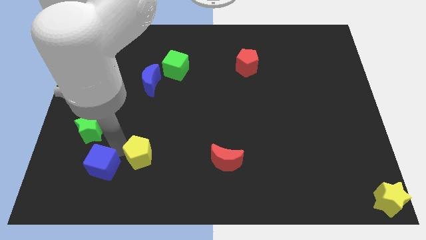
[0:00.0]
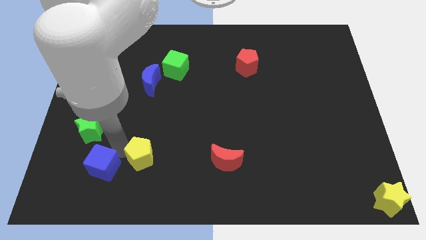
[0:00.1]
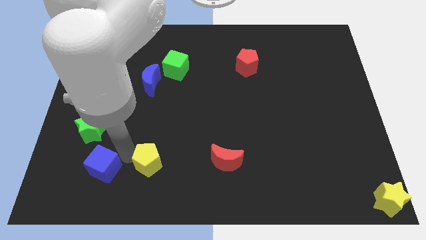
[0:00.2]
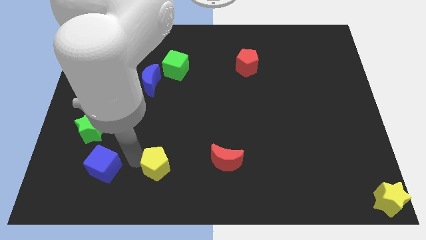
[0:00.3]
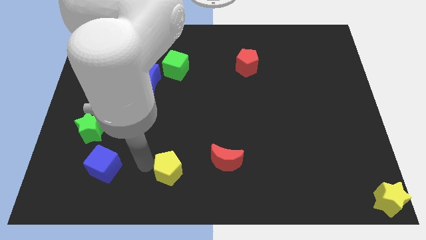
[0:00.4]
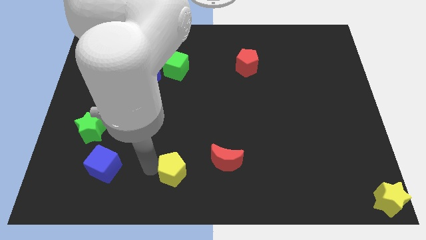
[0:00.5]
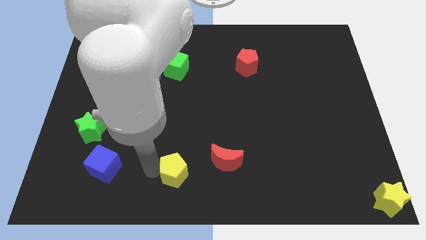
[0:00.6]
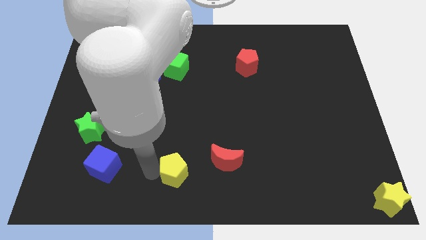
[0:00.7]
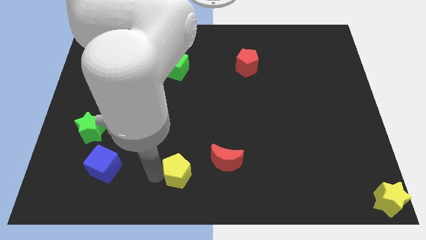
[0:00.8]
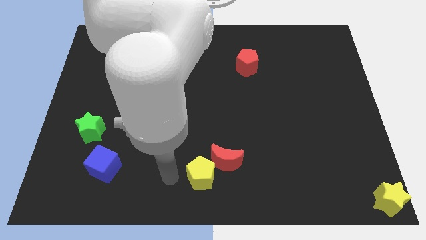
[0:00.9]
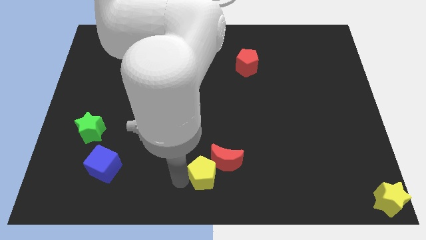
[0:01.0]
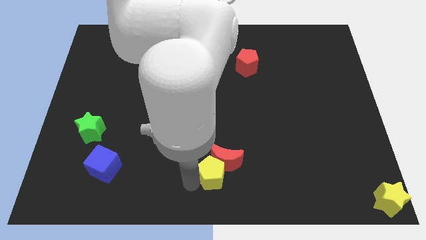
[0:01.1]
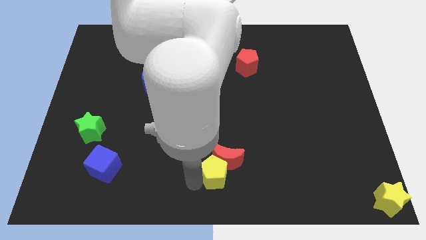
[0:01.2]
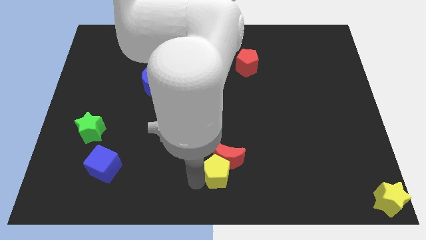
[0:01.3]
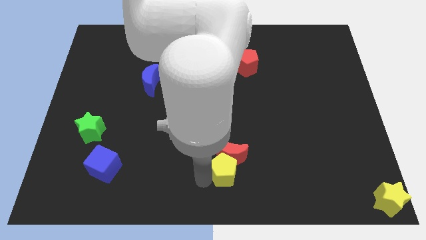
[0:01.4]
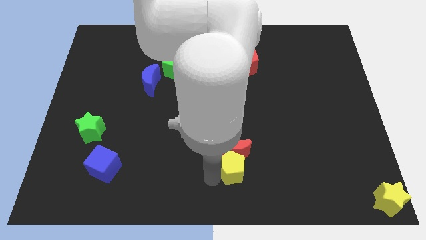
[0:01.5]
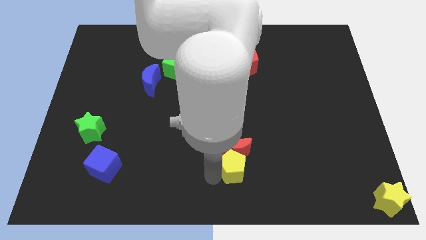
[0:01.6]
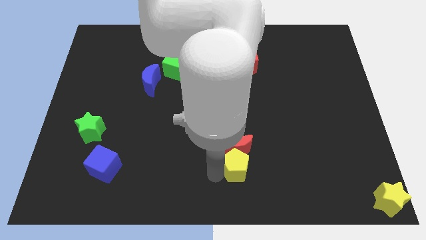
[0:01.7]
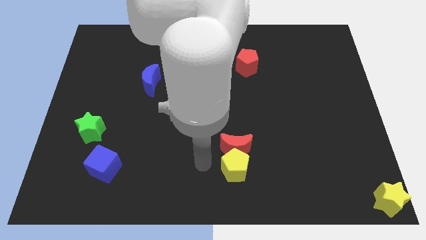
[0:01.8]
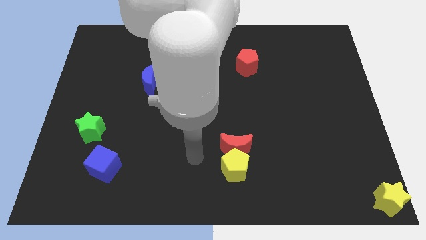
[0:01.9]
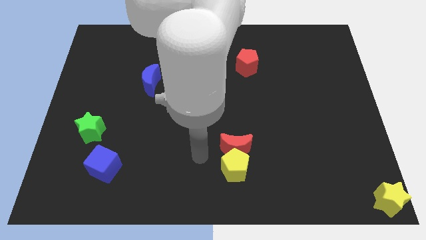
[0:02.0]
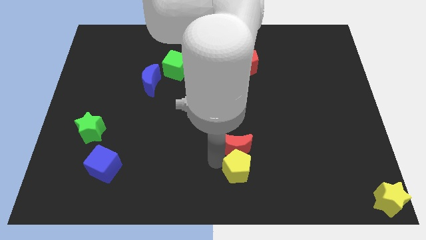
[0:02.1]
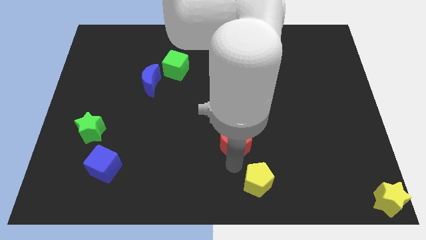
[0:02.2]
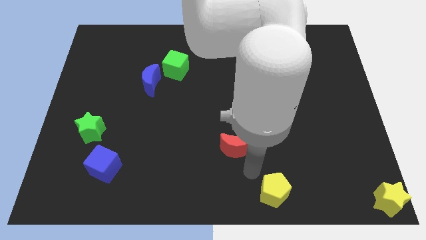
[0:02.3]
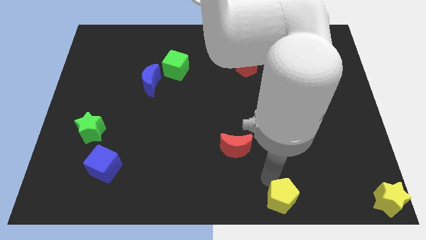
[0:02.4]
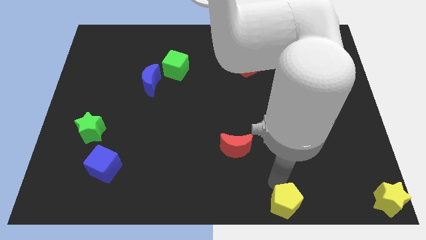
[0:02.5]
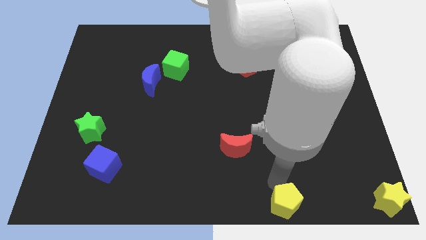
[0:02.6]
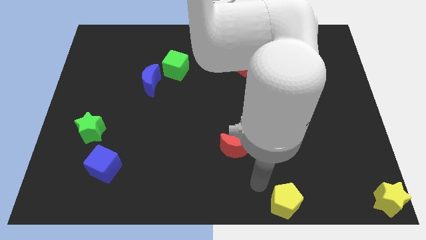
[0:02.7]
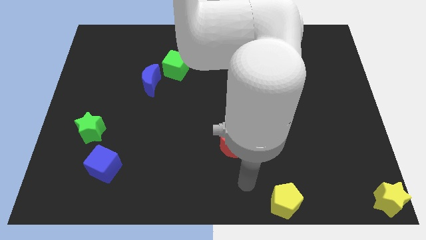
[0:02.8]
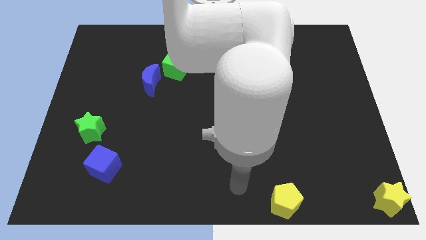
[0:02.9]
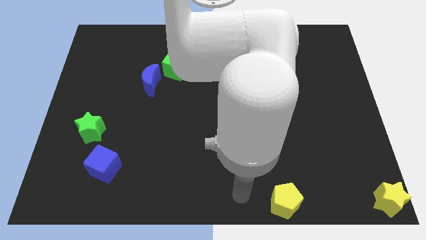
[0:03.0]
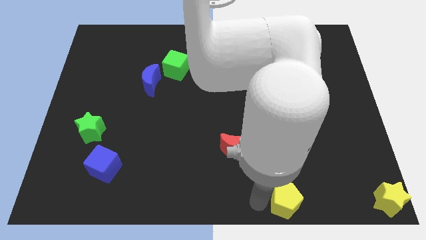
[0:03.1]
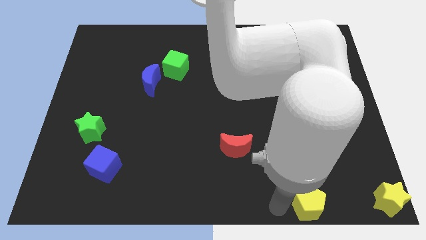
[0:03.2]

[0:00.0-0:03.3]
place the yellow pentagon to the bottom center of the board

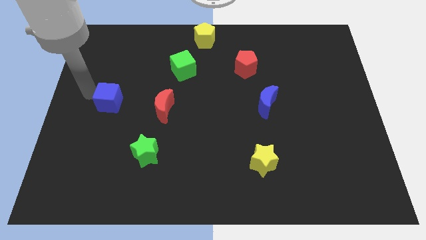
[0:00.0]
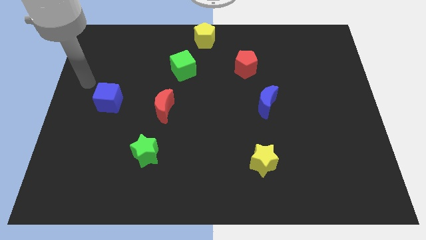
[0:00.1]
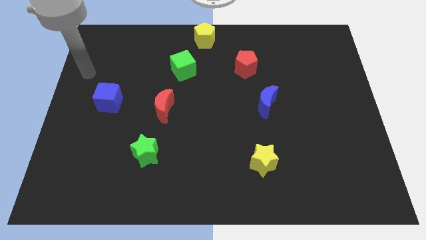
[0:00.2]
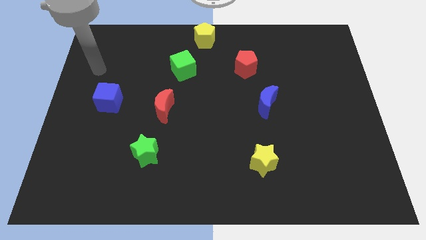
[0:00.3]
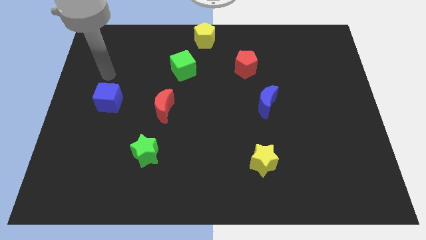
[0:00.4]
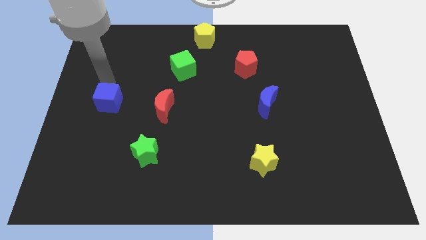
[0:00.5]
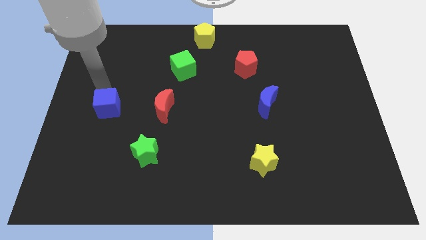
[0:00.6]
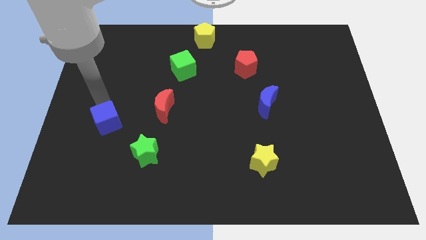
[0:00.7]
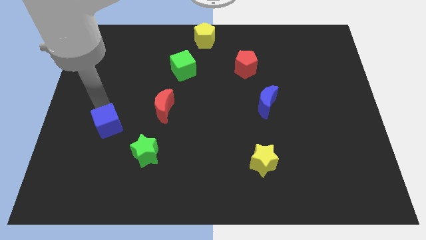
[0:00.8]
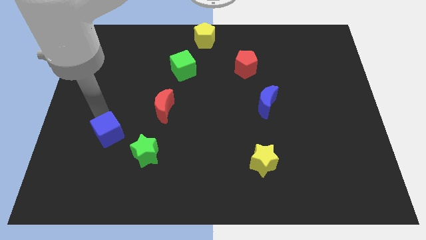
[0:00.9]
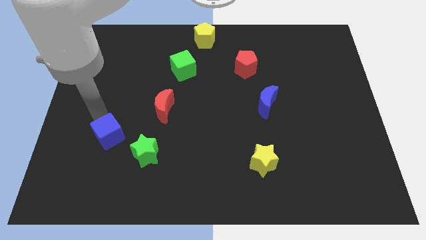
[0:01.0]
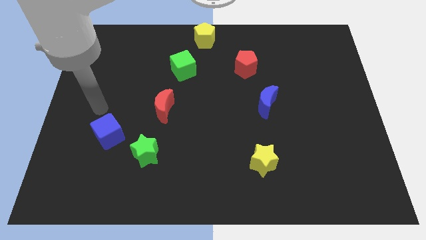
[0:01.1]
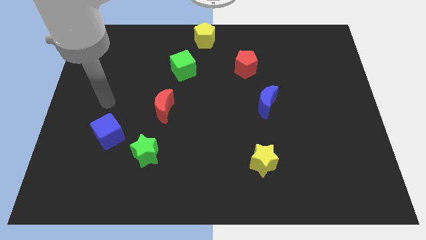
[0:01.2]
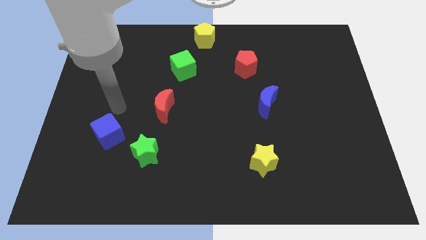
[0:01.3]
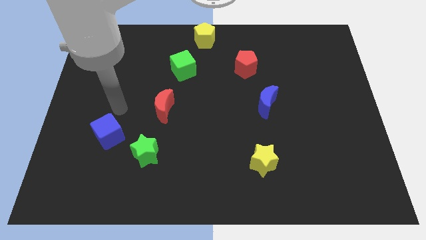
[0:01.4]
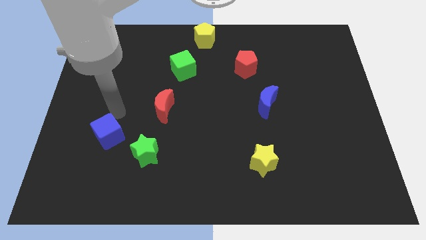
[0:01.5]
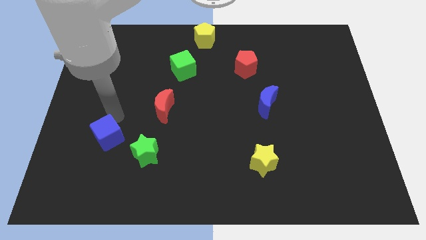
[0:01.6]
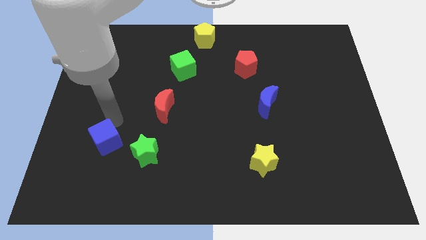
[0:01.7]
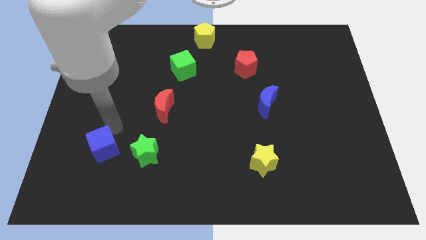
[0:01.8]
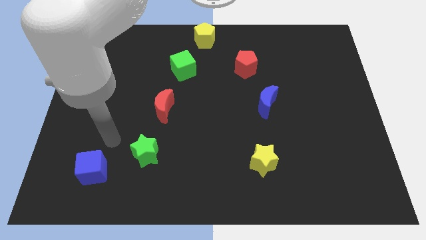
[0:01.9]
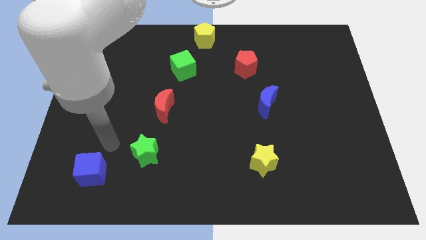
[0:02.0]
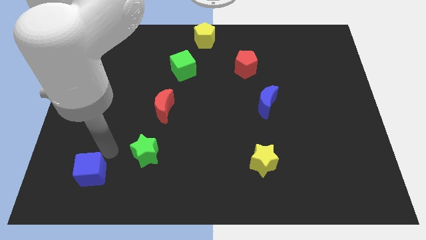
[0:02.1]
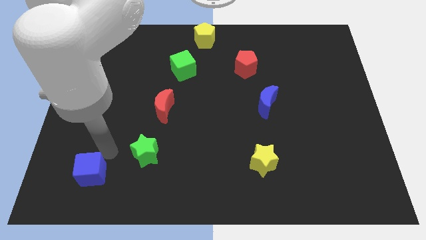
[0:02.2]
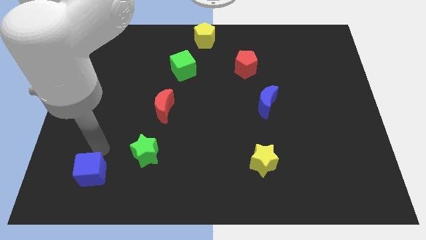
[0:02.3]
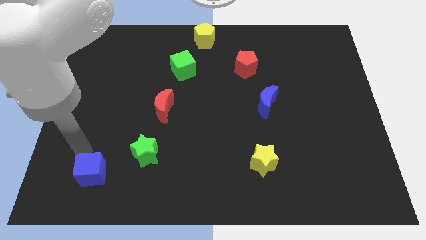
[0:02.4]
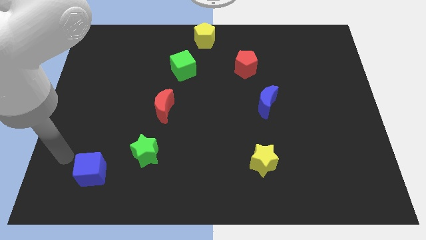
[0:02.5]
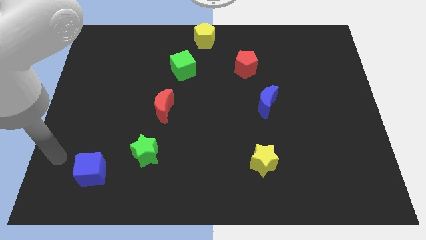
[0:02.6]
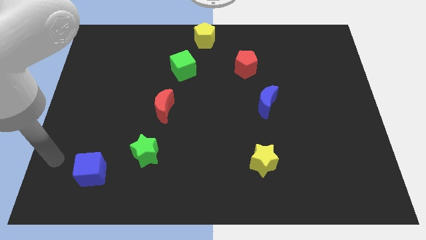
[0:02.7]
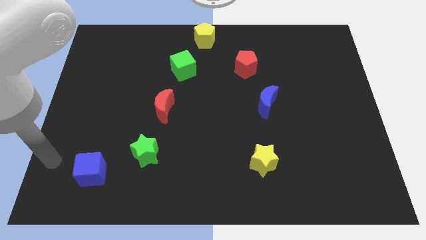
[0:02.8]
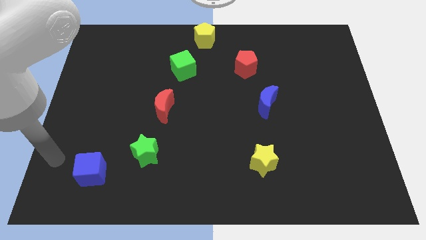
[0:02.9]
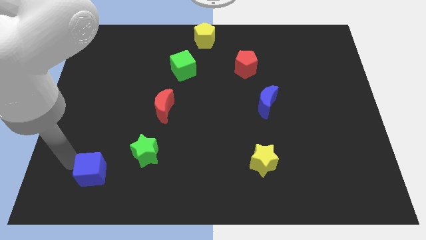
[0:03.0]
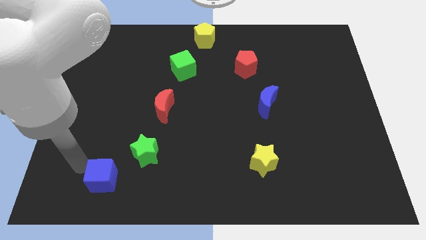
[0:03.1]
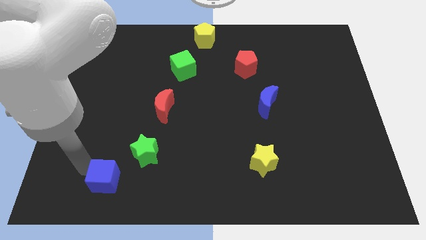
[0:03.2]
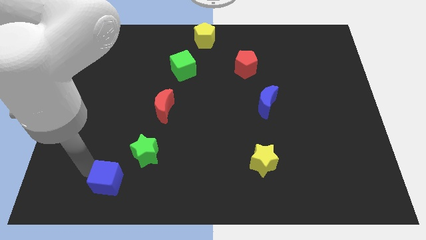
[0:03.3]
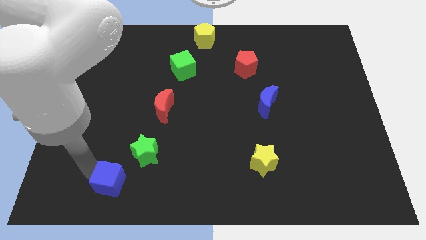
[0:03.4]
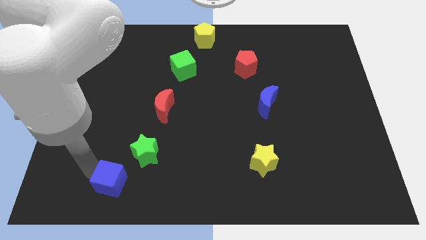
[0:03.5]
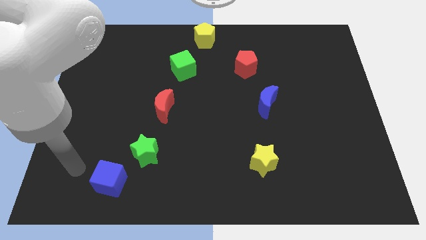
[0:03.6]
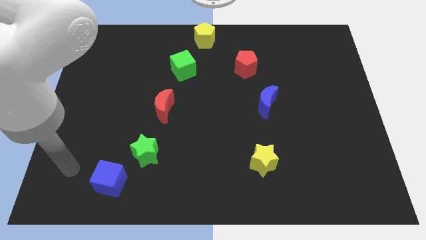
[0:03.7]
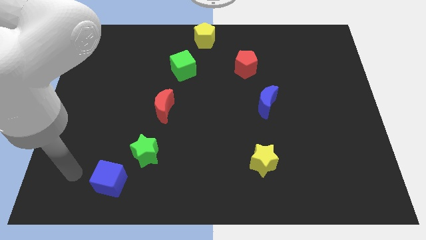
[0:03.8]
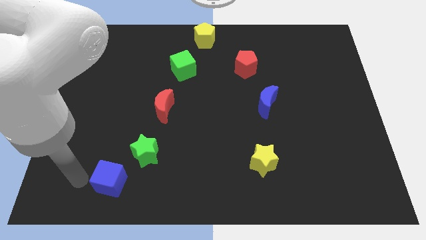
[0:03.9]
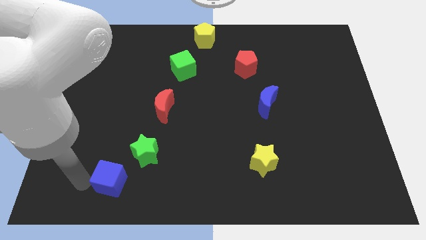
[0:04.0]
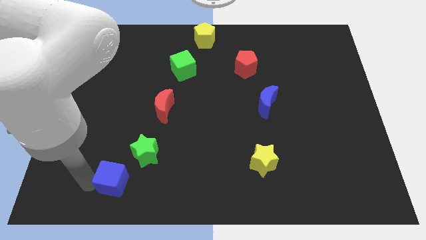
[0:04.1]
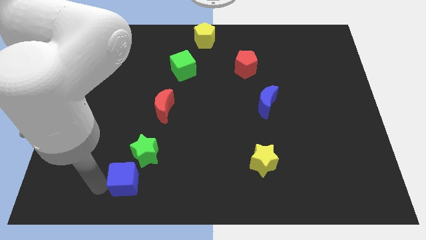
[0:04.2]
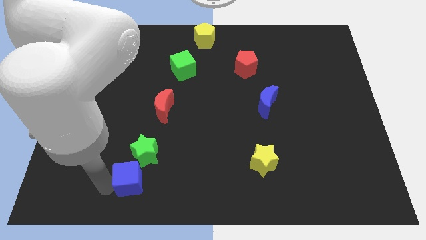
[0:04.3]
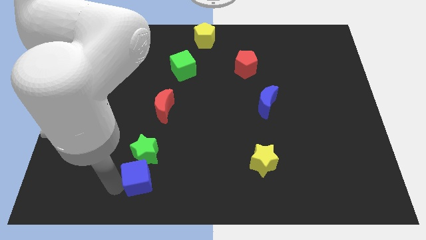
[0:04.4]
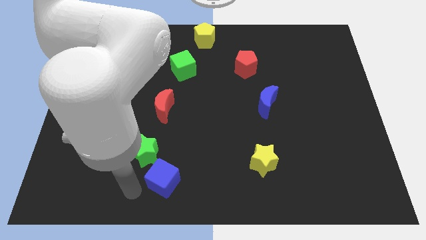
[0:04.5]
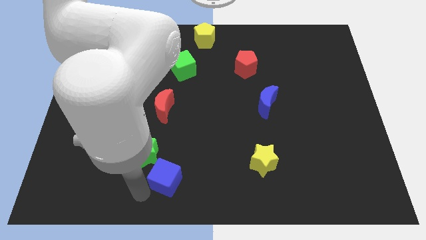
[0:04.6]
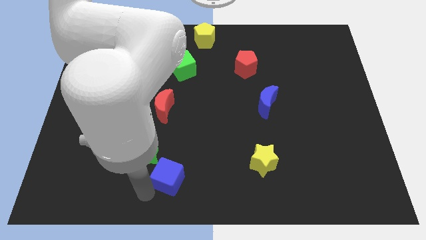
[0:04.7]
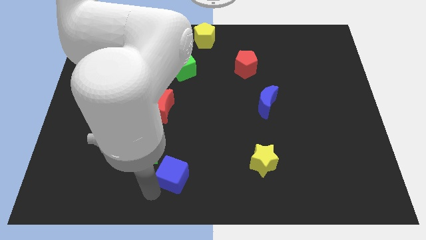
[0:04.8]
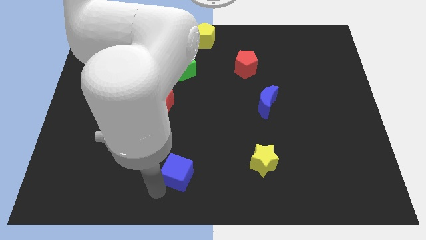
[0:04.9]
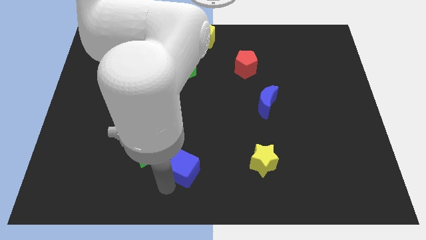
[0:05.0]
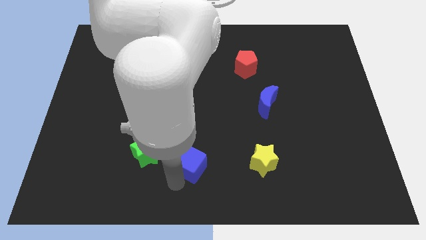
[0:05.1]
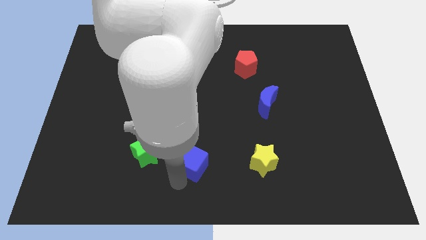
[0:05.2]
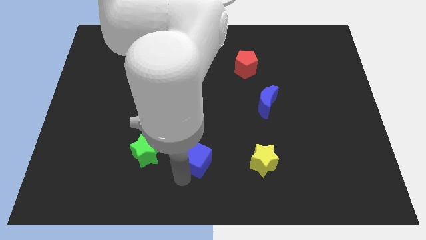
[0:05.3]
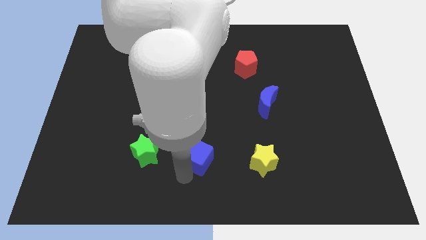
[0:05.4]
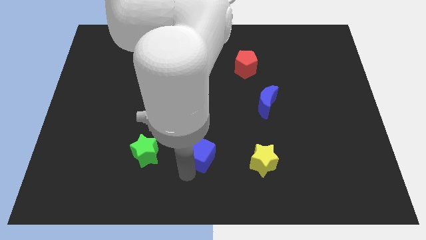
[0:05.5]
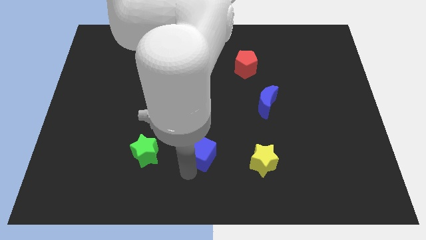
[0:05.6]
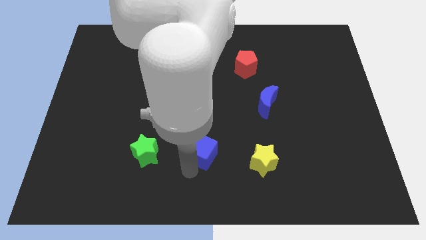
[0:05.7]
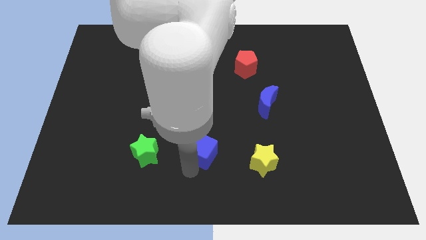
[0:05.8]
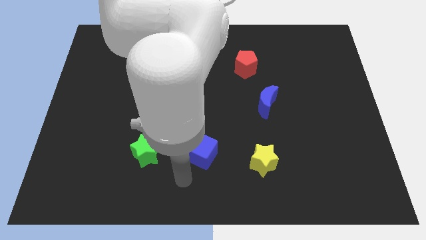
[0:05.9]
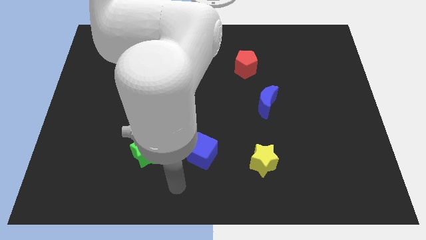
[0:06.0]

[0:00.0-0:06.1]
place the blue cube in between green star and yellow star
